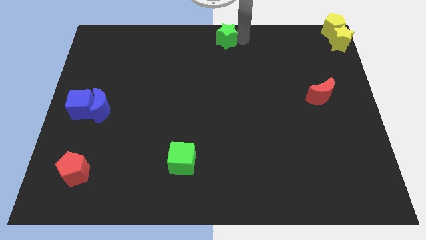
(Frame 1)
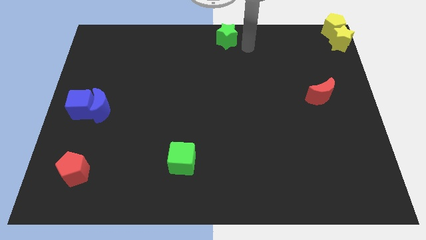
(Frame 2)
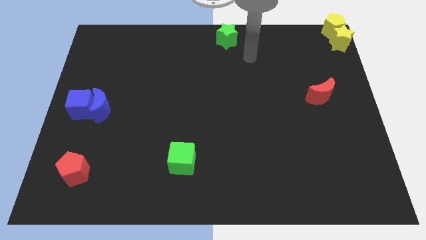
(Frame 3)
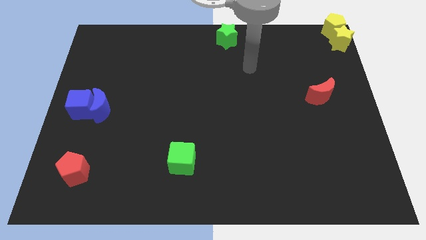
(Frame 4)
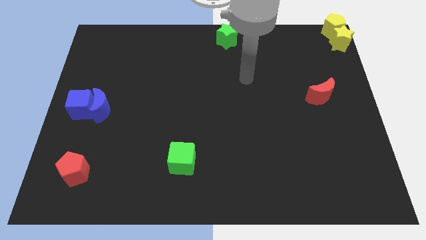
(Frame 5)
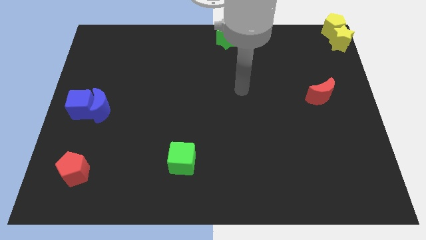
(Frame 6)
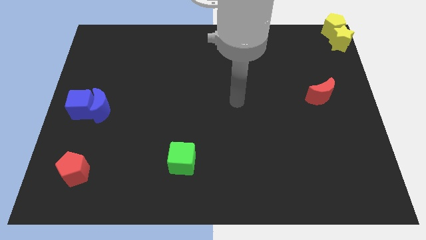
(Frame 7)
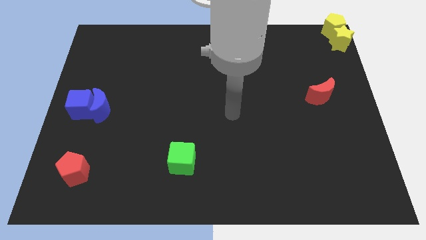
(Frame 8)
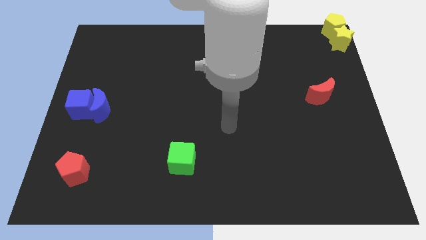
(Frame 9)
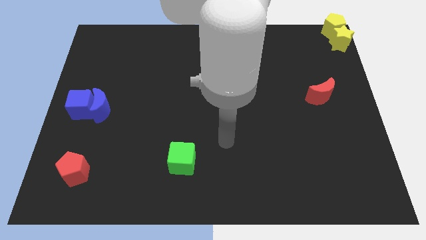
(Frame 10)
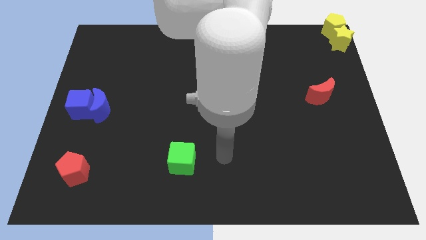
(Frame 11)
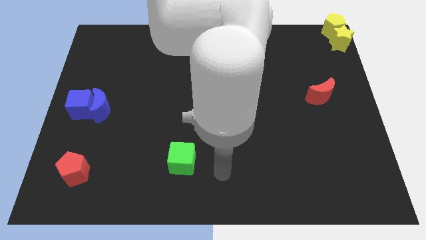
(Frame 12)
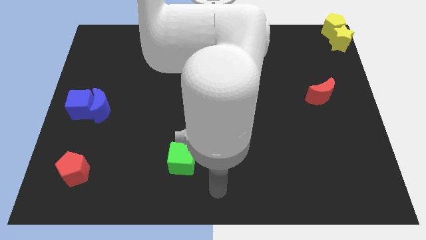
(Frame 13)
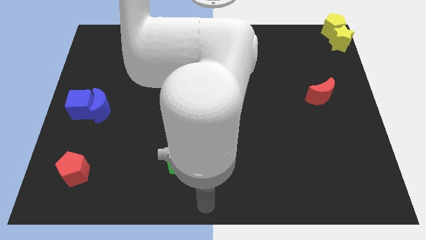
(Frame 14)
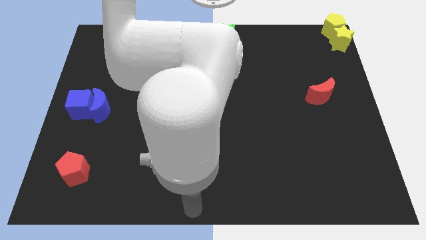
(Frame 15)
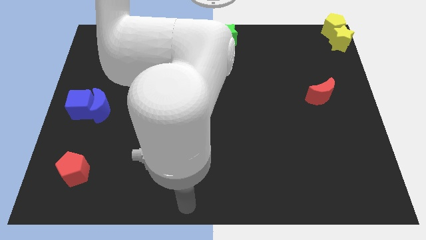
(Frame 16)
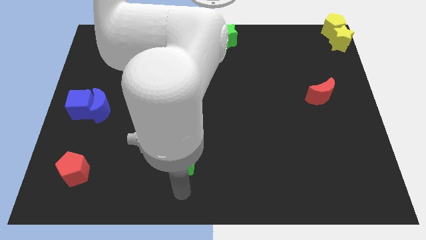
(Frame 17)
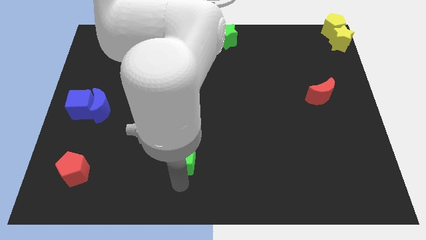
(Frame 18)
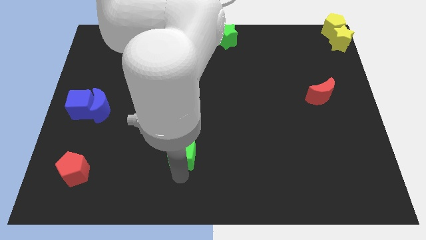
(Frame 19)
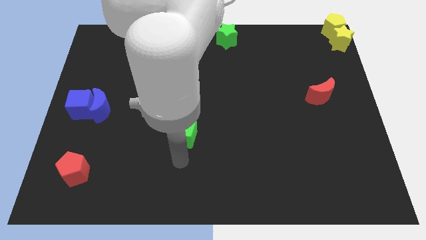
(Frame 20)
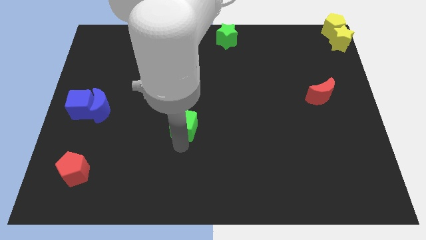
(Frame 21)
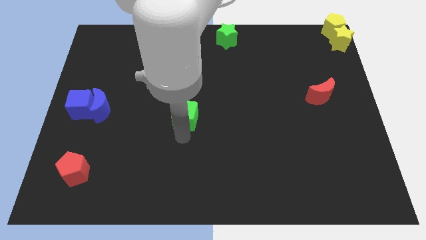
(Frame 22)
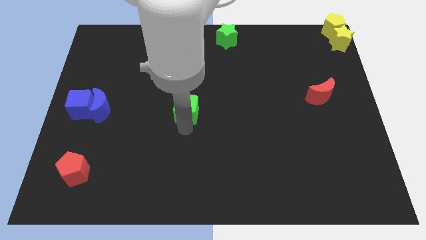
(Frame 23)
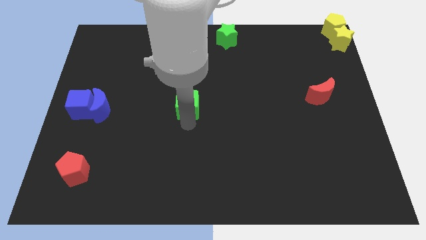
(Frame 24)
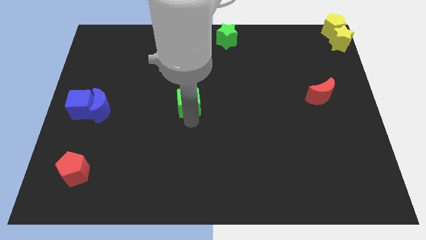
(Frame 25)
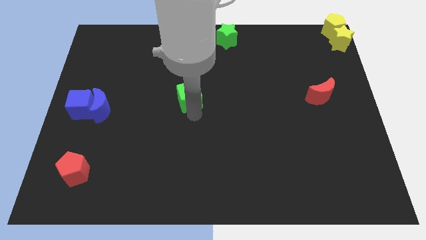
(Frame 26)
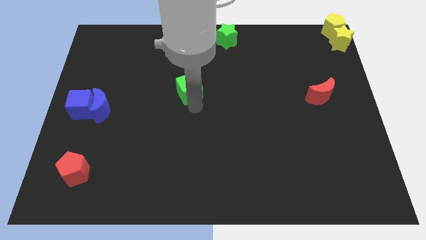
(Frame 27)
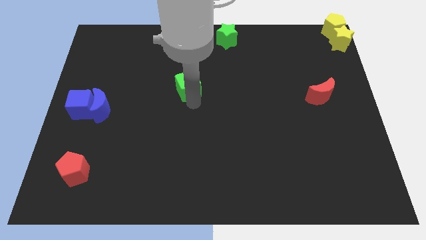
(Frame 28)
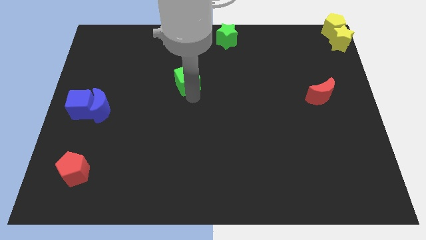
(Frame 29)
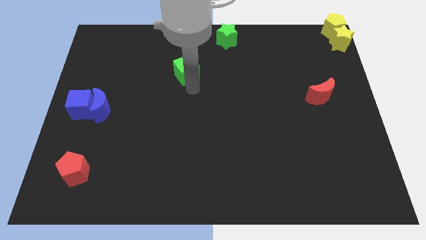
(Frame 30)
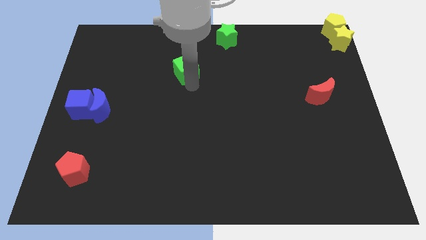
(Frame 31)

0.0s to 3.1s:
slide the green cube towards up

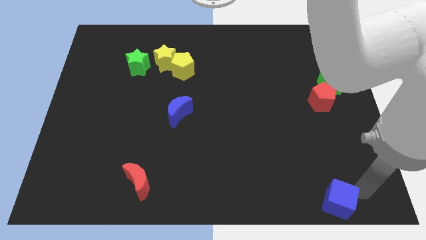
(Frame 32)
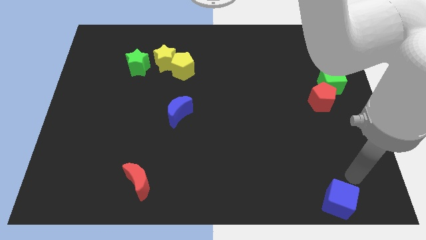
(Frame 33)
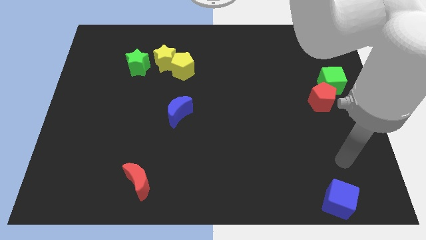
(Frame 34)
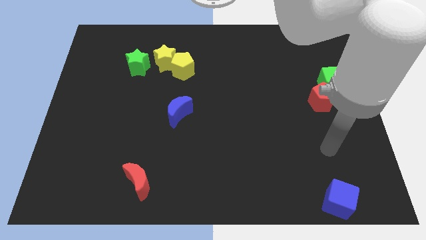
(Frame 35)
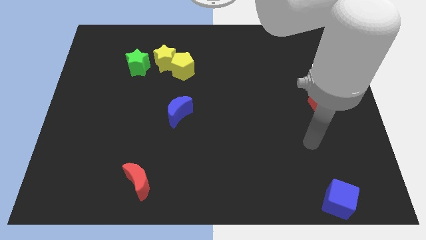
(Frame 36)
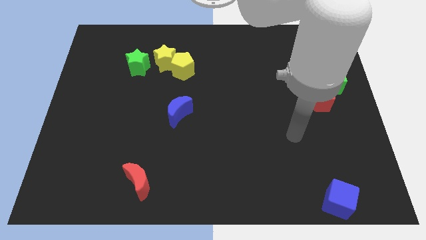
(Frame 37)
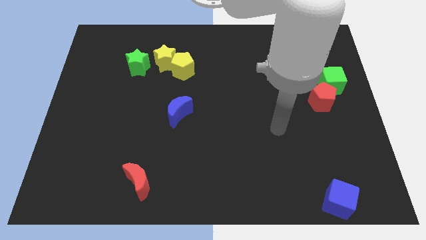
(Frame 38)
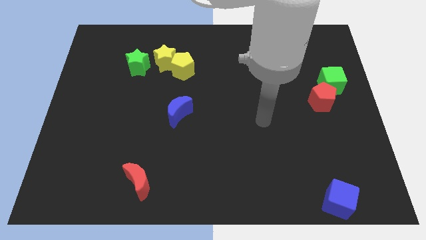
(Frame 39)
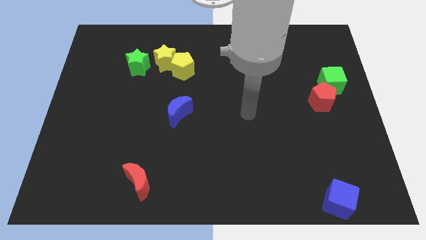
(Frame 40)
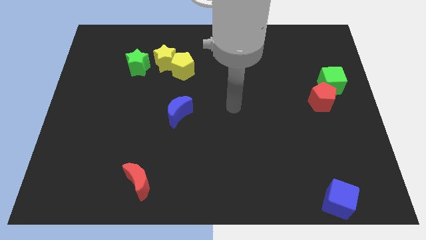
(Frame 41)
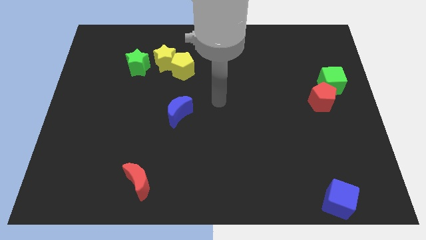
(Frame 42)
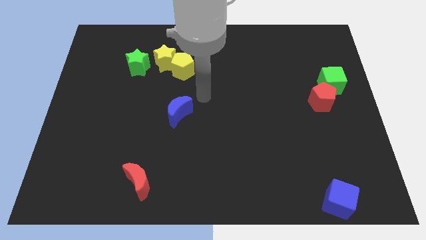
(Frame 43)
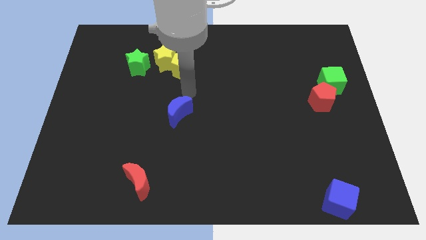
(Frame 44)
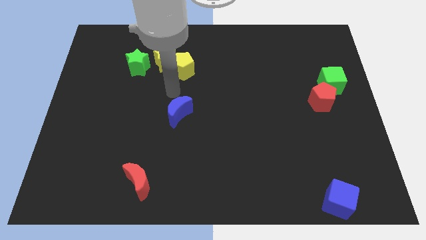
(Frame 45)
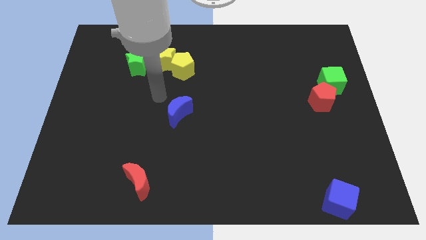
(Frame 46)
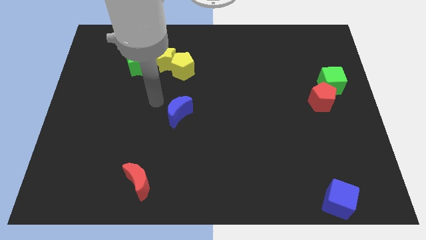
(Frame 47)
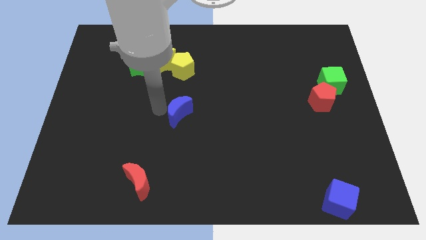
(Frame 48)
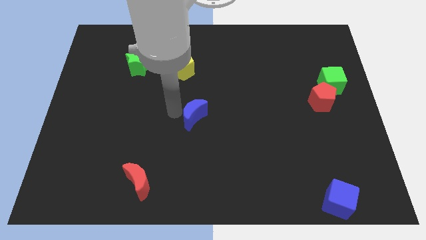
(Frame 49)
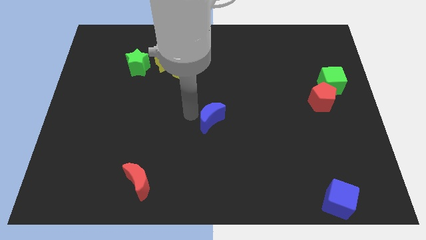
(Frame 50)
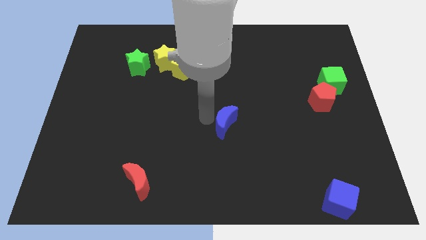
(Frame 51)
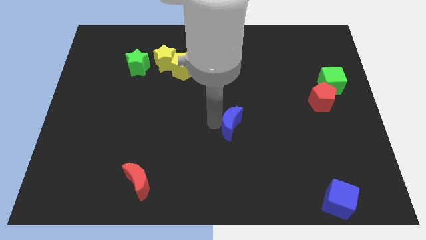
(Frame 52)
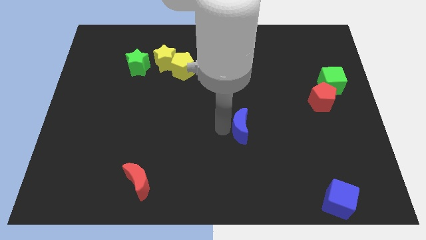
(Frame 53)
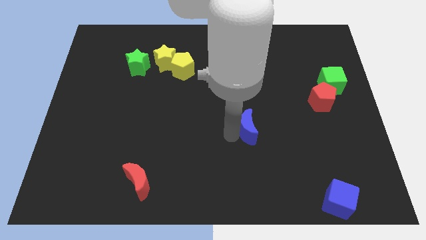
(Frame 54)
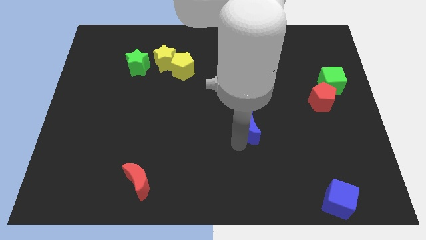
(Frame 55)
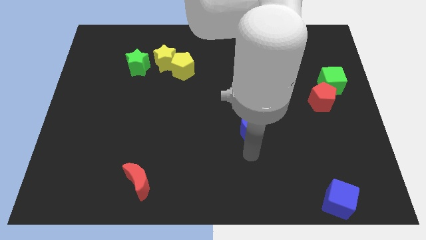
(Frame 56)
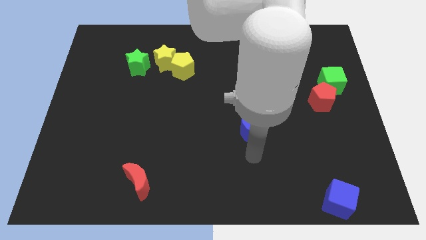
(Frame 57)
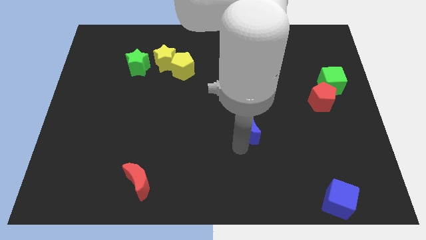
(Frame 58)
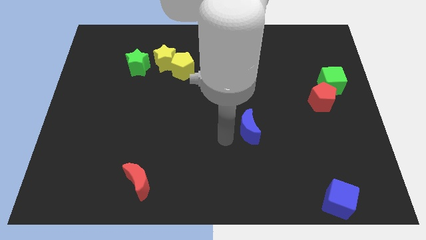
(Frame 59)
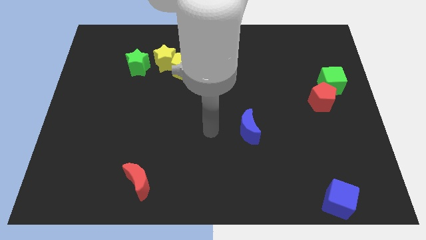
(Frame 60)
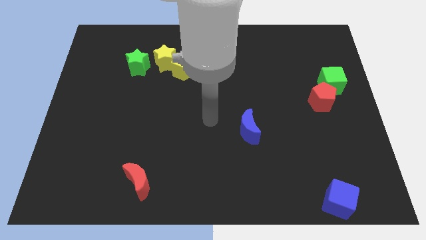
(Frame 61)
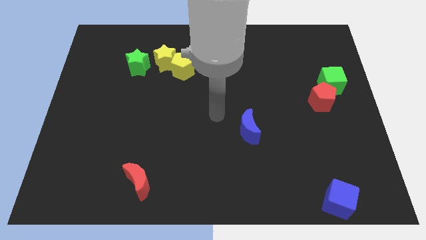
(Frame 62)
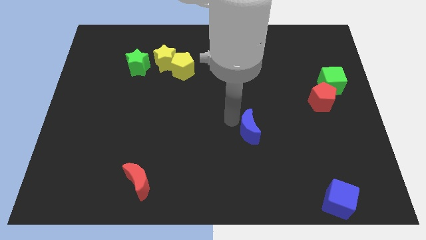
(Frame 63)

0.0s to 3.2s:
put the blue moon in between the red moon and red pentagon

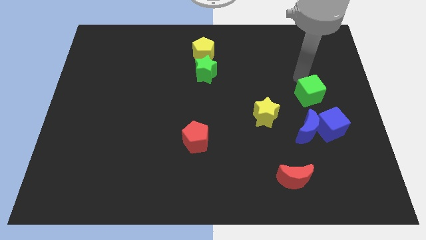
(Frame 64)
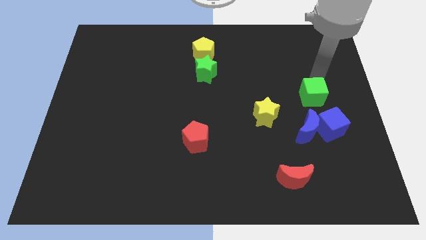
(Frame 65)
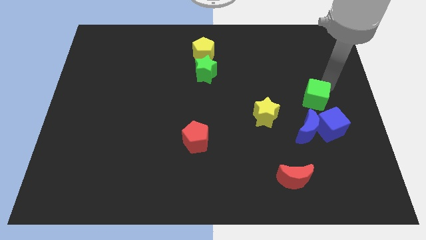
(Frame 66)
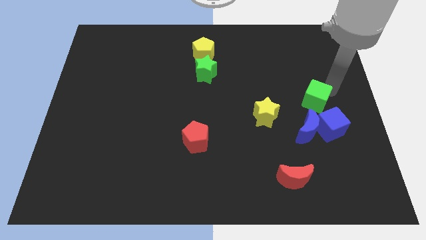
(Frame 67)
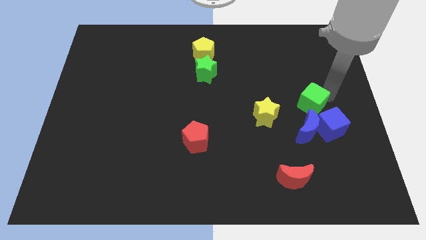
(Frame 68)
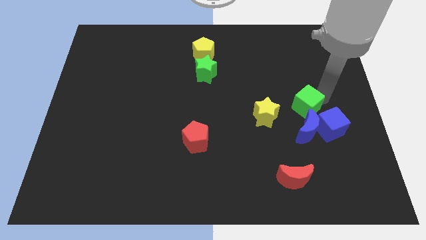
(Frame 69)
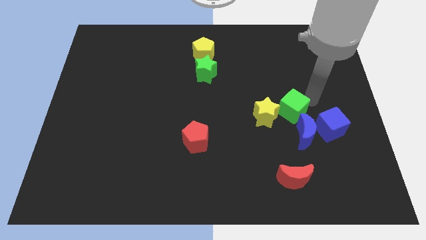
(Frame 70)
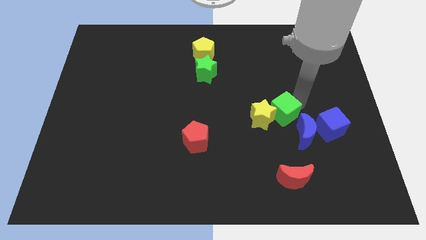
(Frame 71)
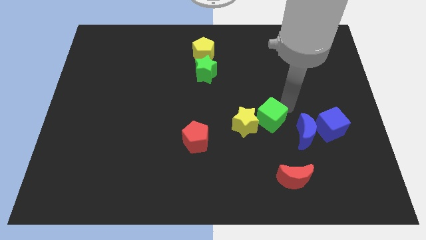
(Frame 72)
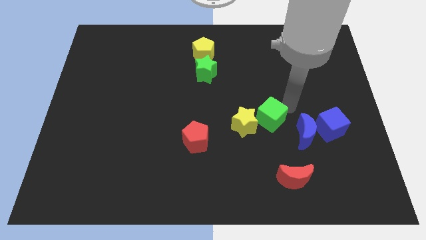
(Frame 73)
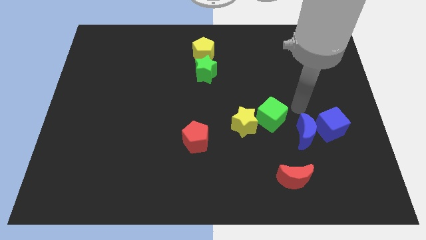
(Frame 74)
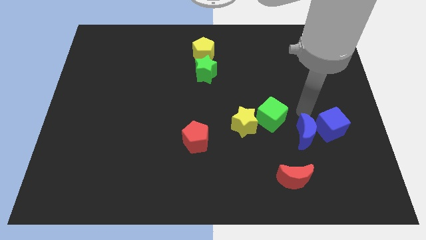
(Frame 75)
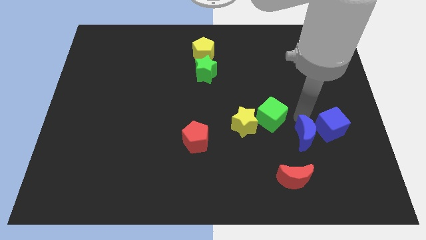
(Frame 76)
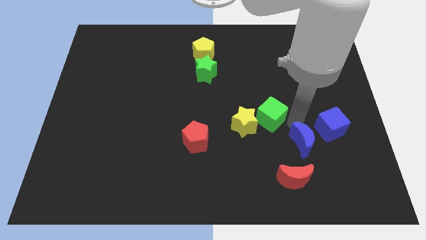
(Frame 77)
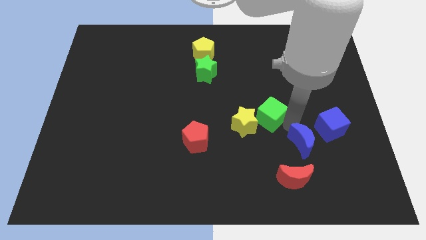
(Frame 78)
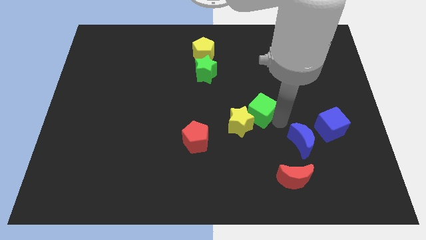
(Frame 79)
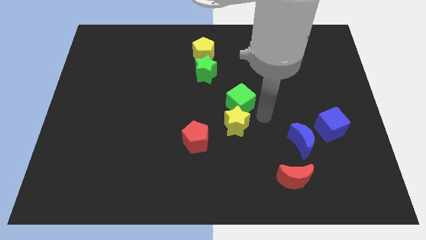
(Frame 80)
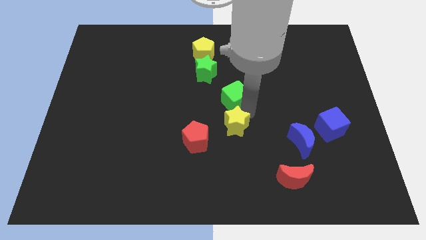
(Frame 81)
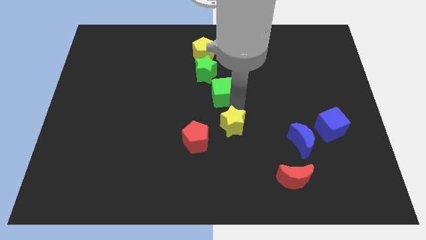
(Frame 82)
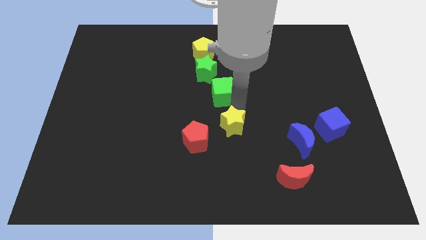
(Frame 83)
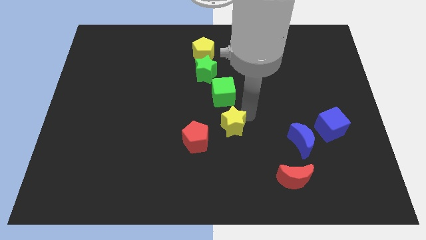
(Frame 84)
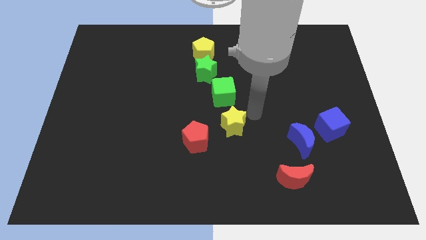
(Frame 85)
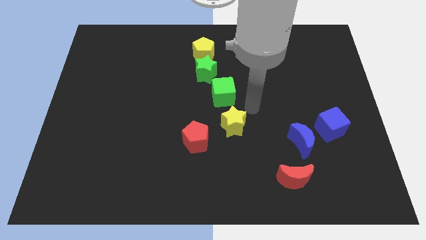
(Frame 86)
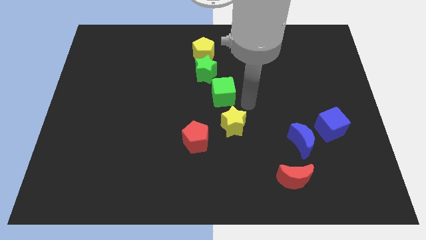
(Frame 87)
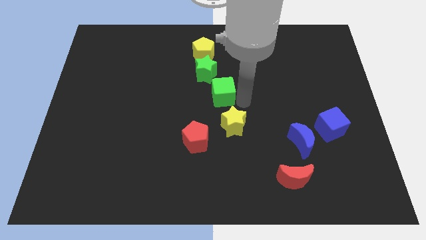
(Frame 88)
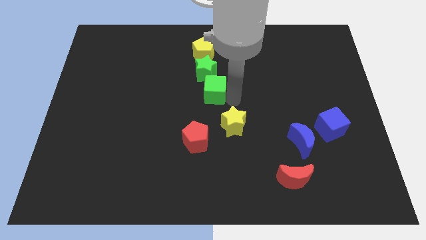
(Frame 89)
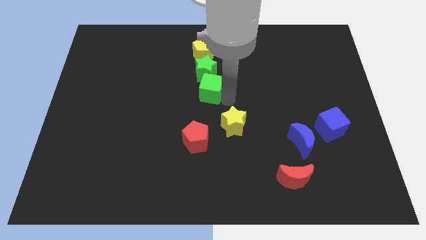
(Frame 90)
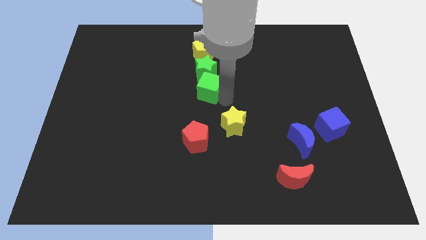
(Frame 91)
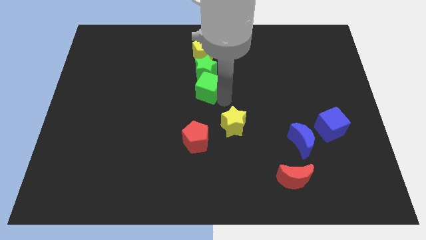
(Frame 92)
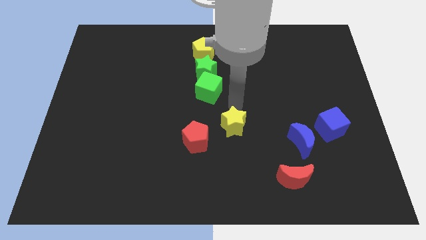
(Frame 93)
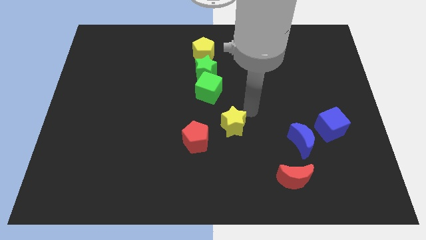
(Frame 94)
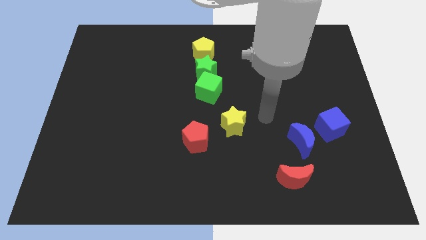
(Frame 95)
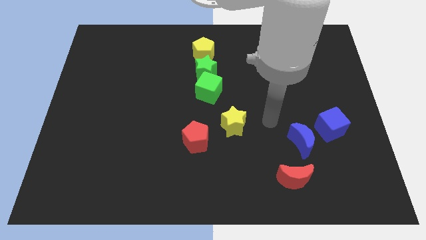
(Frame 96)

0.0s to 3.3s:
move the green cube to the bottom of the green star
